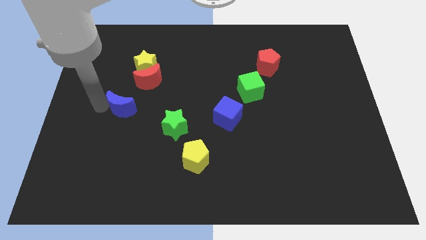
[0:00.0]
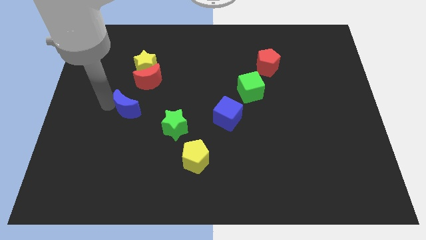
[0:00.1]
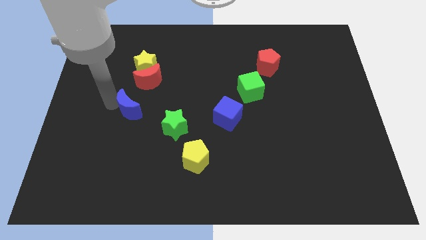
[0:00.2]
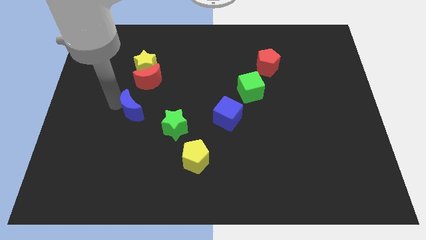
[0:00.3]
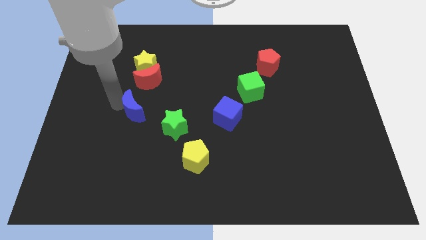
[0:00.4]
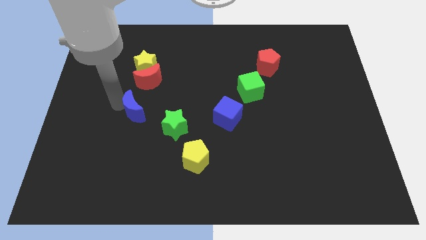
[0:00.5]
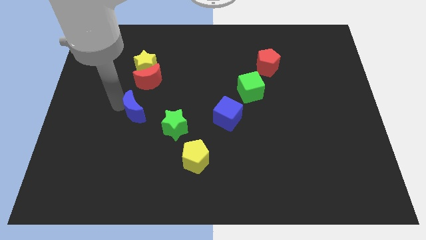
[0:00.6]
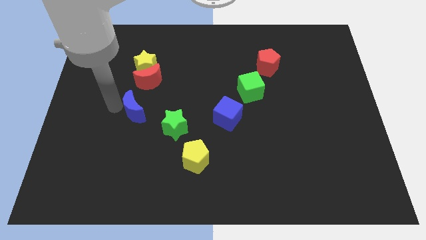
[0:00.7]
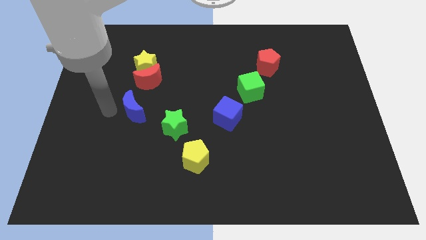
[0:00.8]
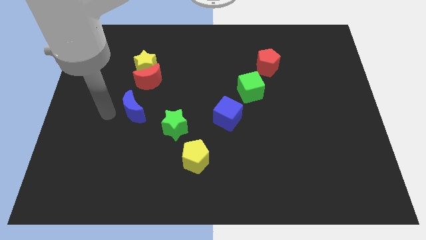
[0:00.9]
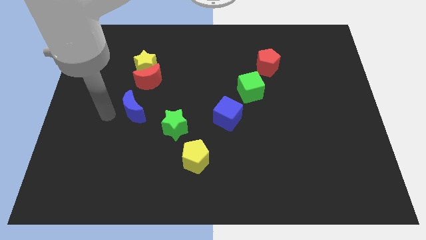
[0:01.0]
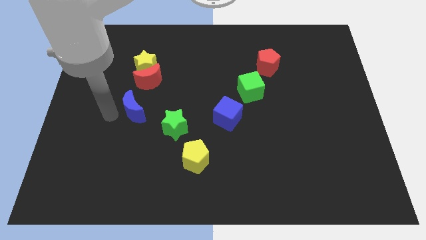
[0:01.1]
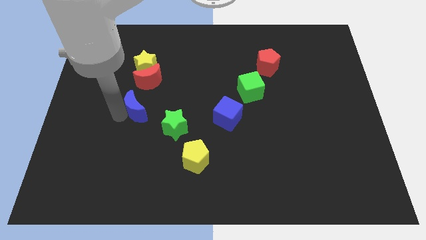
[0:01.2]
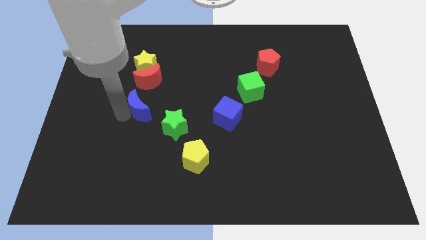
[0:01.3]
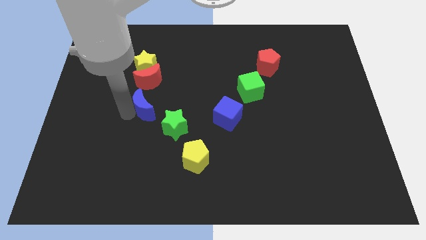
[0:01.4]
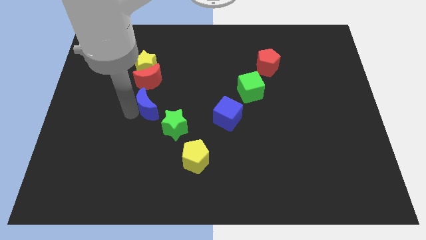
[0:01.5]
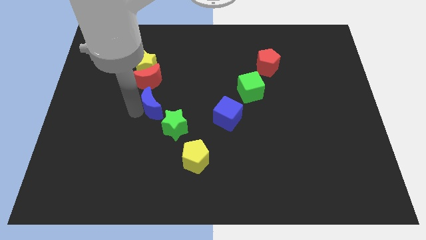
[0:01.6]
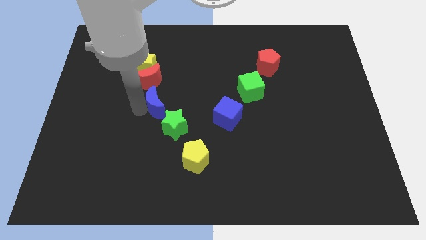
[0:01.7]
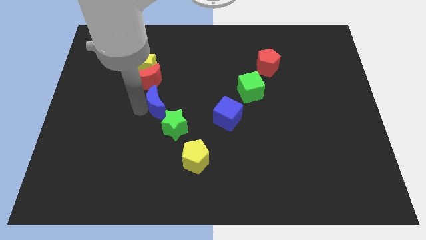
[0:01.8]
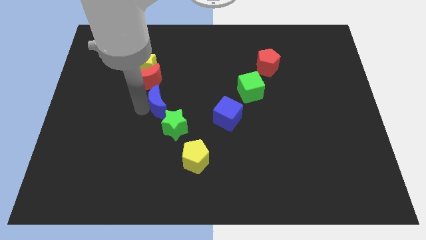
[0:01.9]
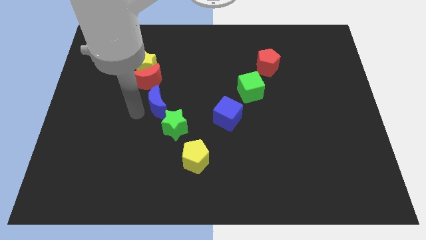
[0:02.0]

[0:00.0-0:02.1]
push the blue crescent between green star and red crescent

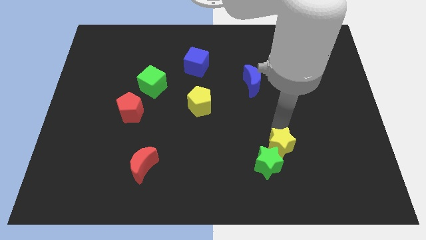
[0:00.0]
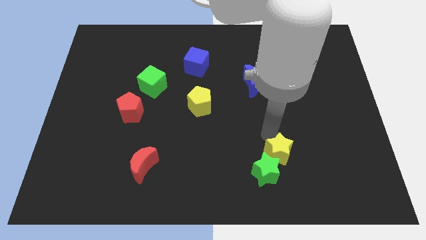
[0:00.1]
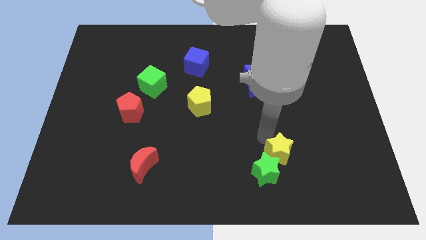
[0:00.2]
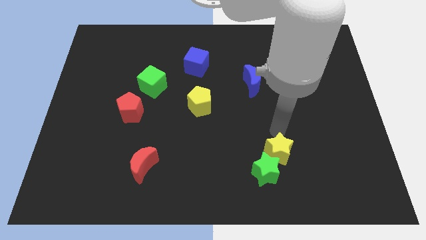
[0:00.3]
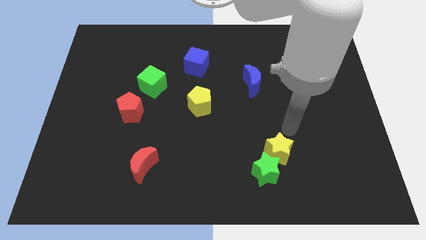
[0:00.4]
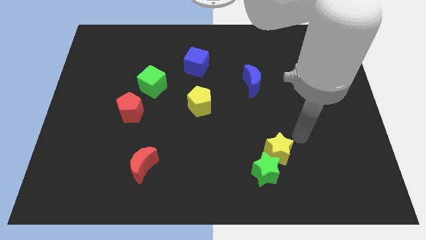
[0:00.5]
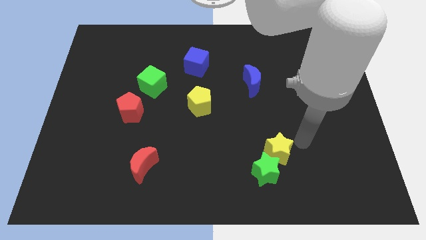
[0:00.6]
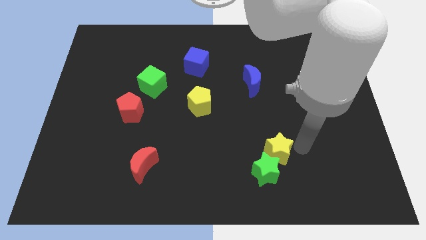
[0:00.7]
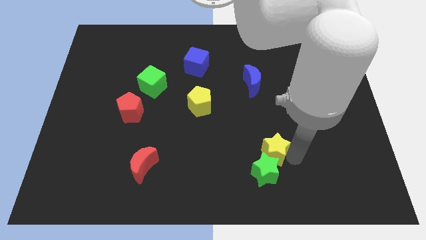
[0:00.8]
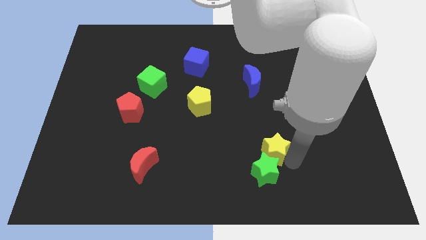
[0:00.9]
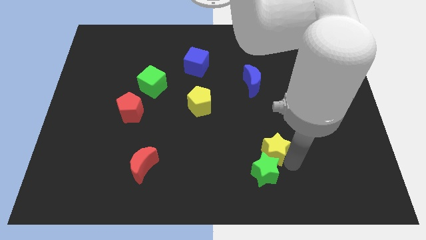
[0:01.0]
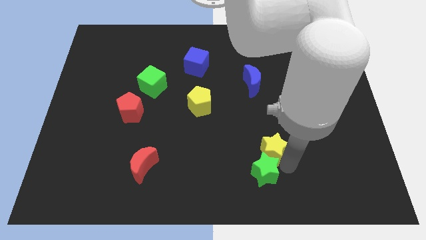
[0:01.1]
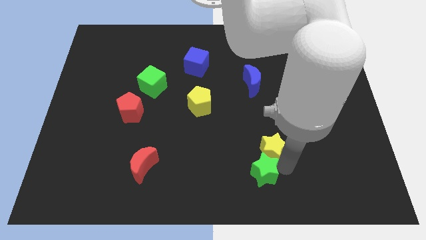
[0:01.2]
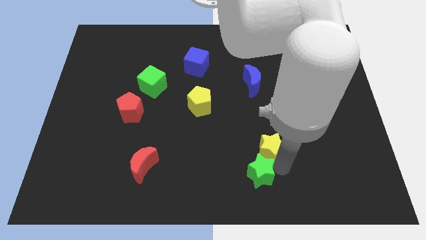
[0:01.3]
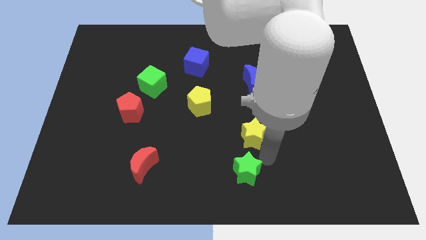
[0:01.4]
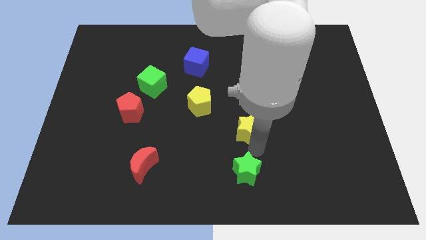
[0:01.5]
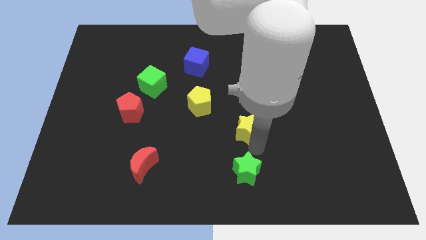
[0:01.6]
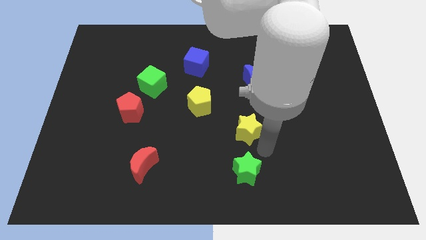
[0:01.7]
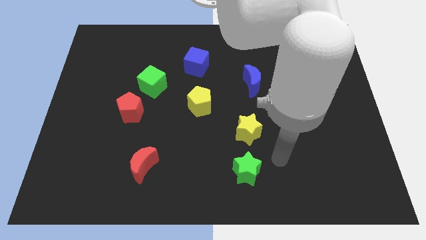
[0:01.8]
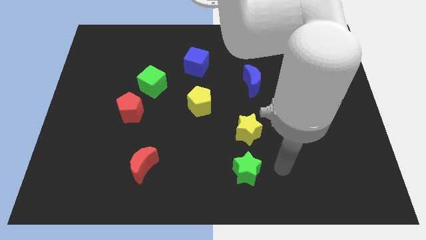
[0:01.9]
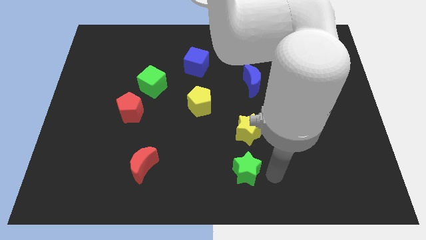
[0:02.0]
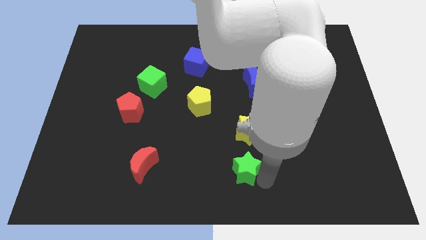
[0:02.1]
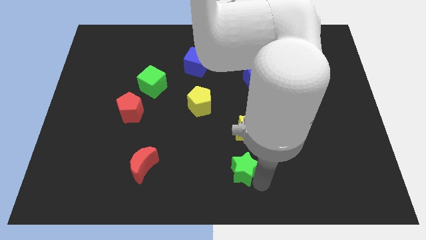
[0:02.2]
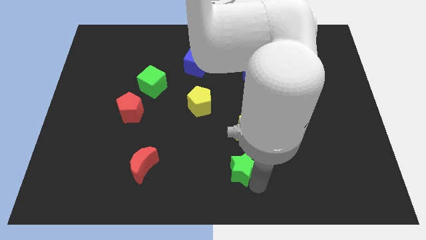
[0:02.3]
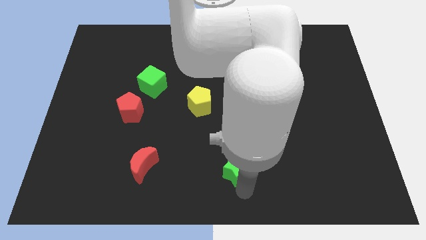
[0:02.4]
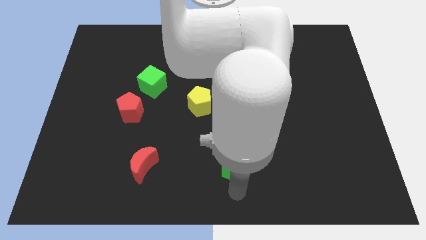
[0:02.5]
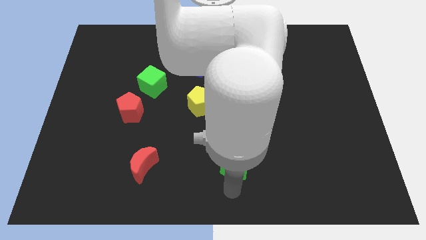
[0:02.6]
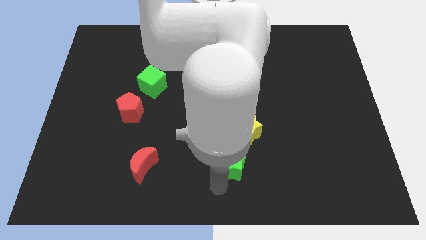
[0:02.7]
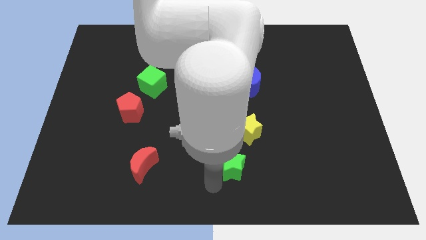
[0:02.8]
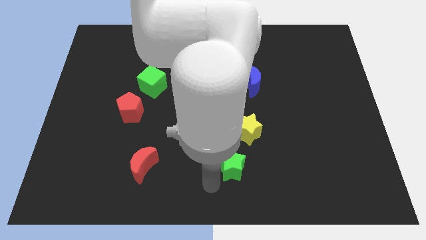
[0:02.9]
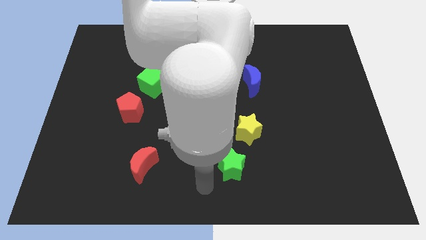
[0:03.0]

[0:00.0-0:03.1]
separate the yellow star from the green star

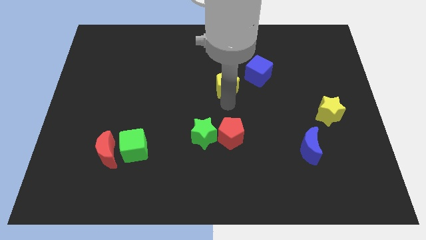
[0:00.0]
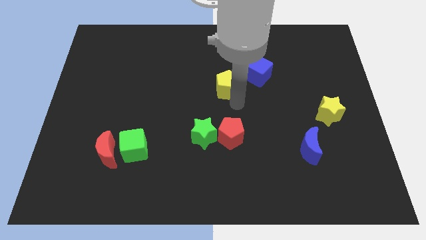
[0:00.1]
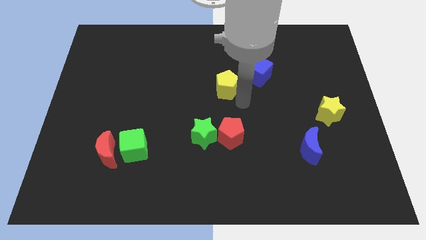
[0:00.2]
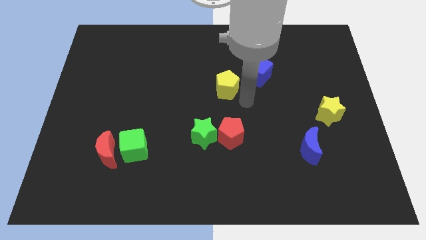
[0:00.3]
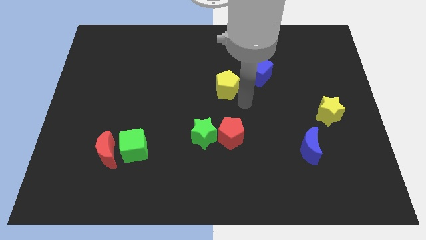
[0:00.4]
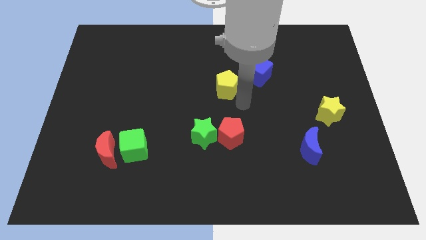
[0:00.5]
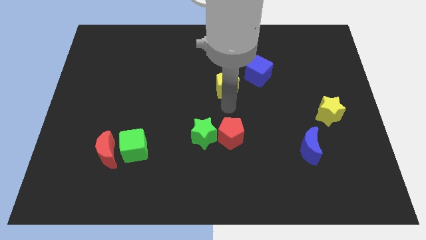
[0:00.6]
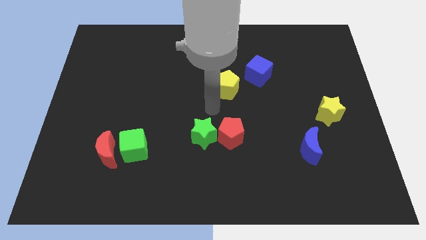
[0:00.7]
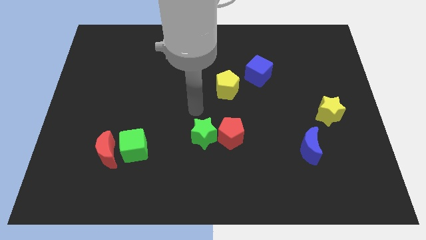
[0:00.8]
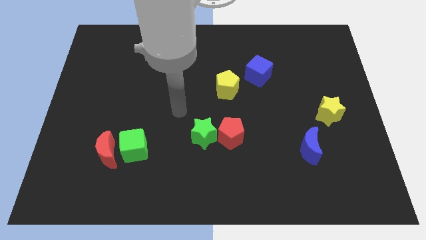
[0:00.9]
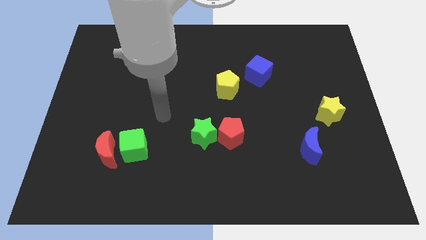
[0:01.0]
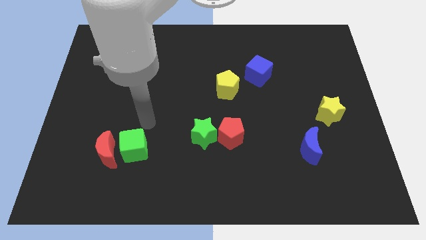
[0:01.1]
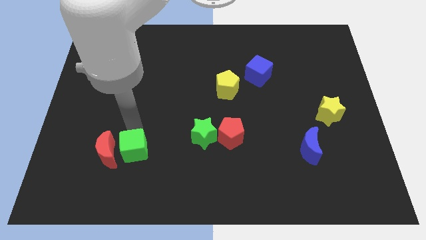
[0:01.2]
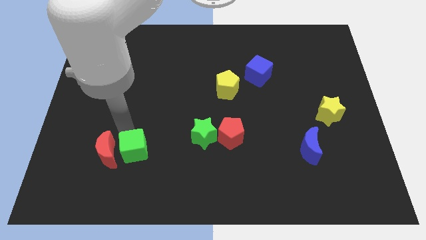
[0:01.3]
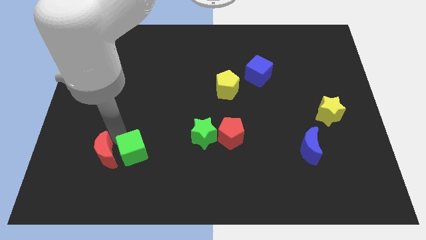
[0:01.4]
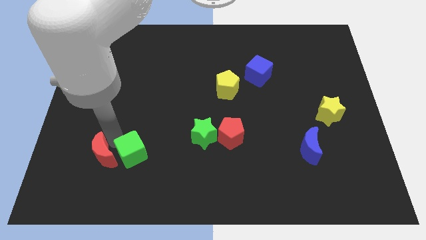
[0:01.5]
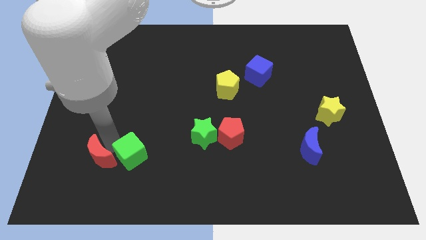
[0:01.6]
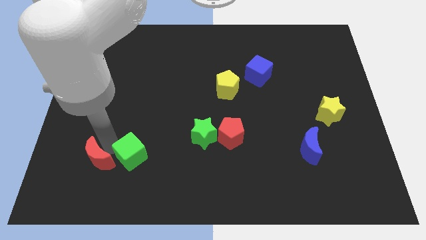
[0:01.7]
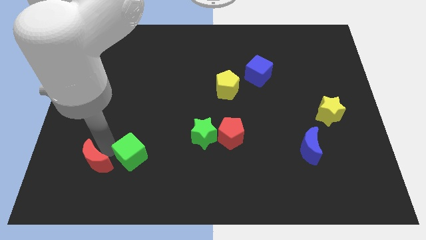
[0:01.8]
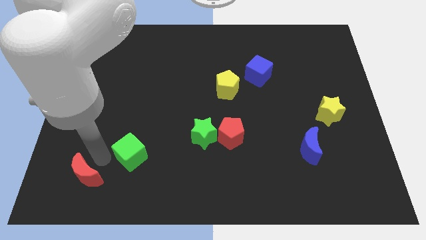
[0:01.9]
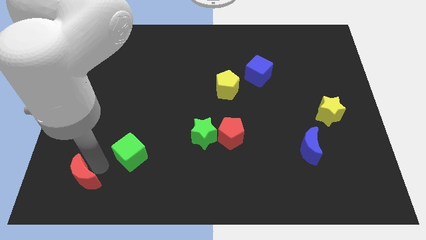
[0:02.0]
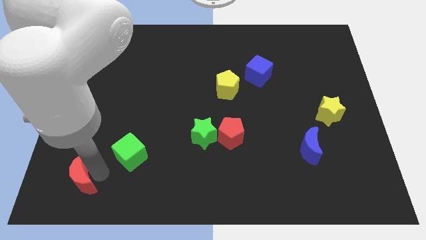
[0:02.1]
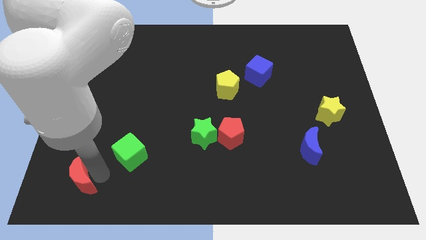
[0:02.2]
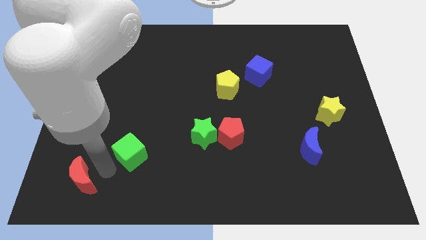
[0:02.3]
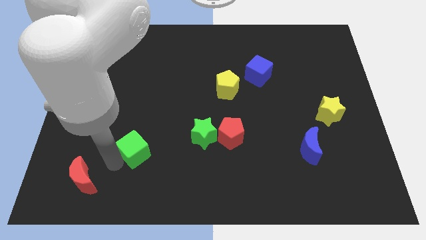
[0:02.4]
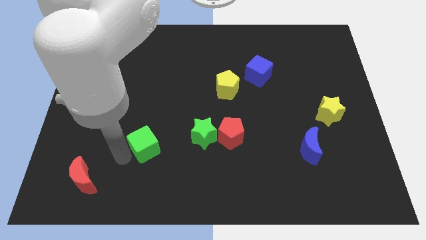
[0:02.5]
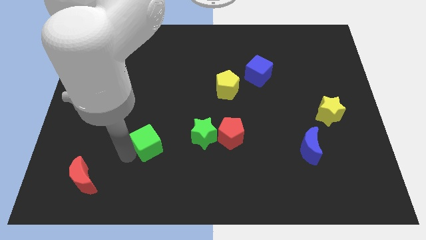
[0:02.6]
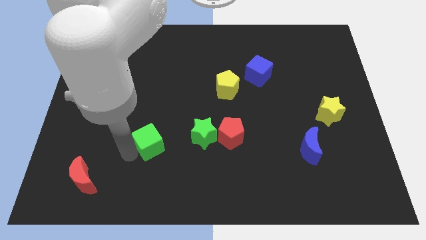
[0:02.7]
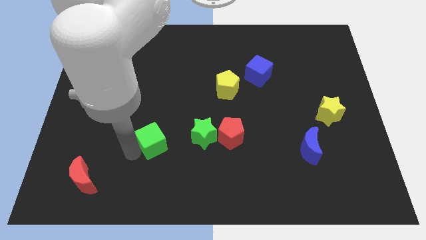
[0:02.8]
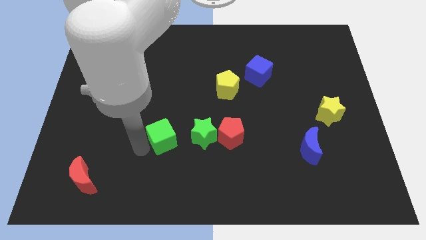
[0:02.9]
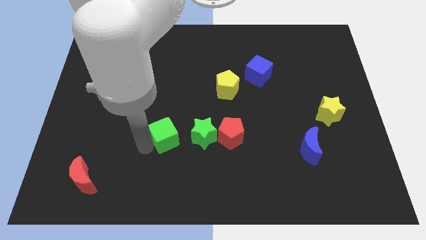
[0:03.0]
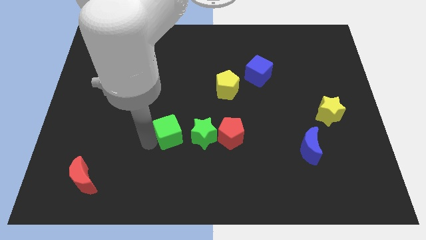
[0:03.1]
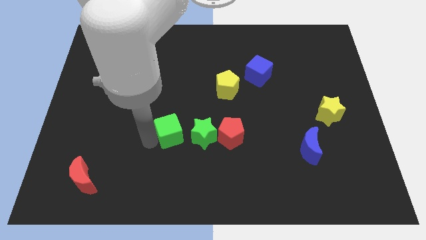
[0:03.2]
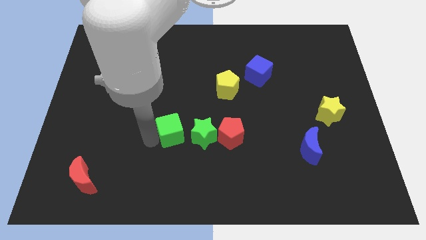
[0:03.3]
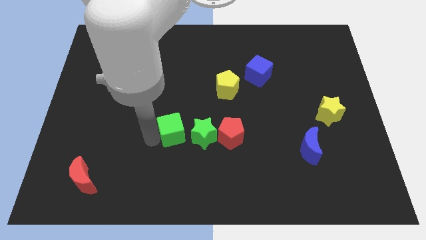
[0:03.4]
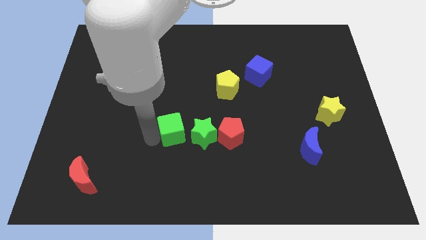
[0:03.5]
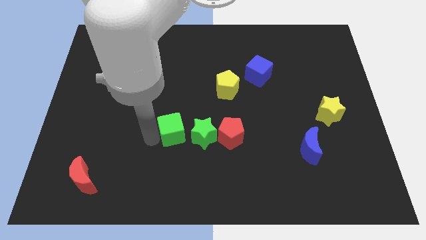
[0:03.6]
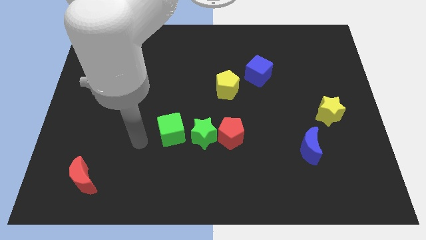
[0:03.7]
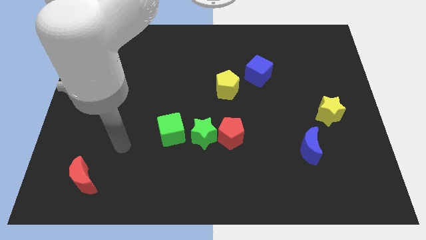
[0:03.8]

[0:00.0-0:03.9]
push the green cube to the left of green star

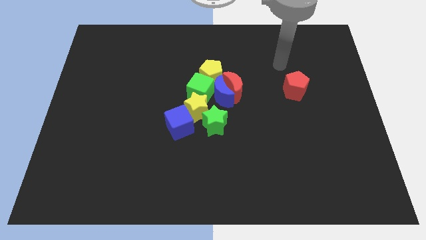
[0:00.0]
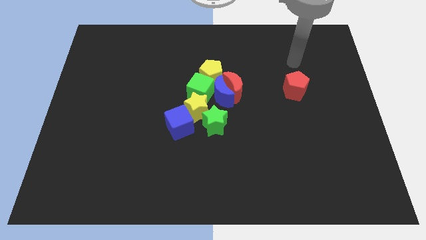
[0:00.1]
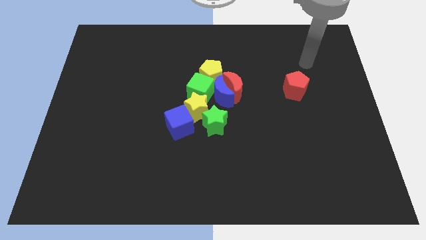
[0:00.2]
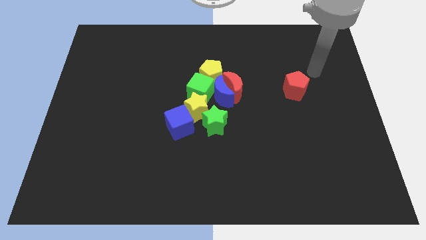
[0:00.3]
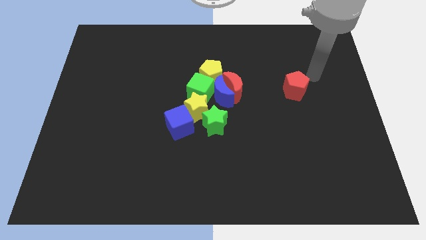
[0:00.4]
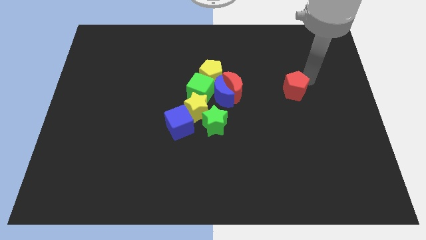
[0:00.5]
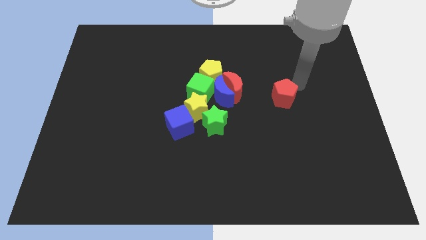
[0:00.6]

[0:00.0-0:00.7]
put the red pentagon parallel to red moon
